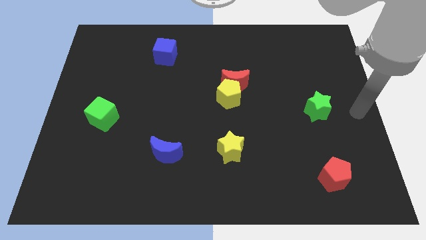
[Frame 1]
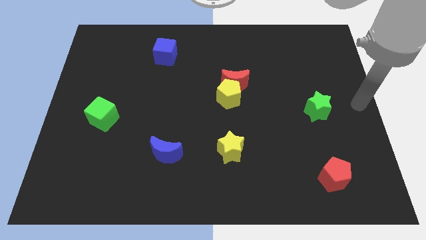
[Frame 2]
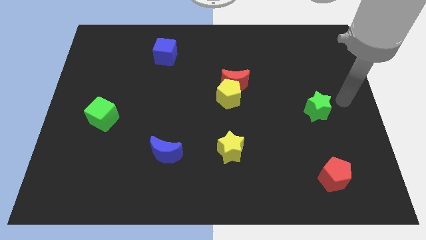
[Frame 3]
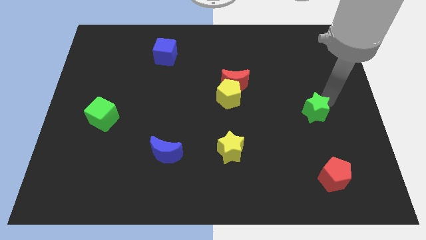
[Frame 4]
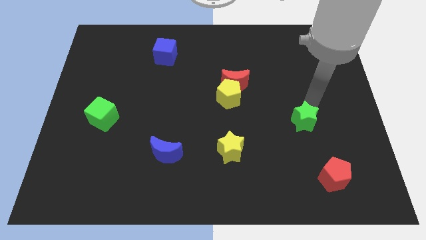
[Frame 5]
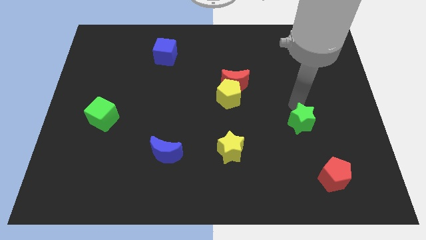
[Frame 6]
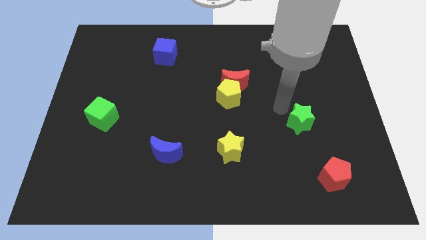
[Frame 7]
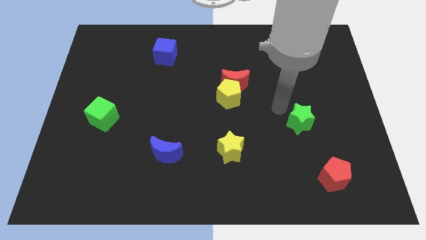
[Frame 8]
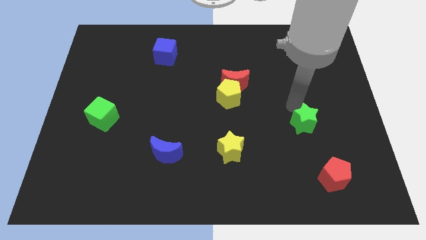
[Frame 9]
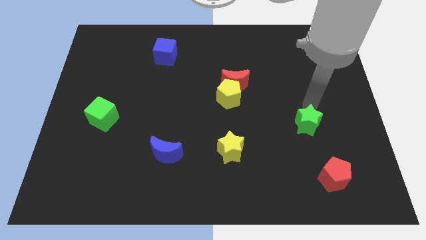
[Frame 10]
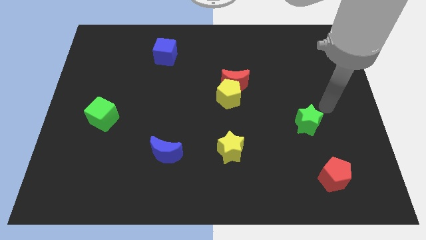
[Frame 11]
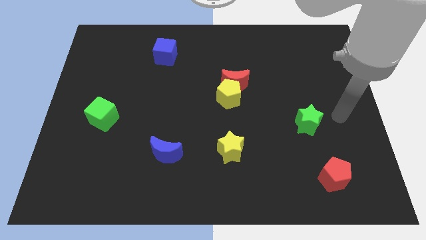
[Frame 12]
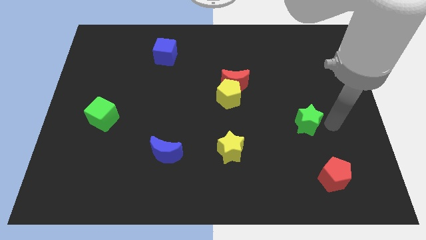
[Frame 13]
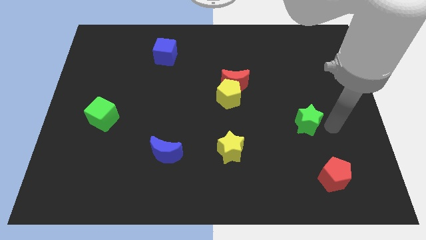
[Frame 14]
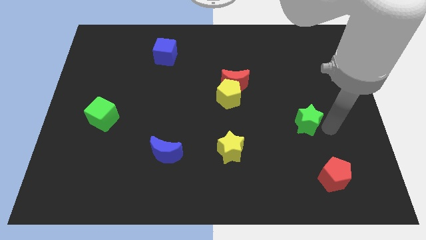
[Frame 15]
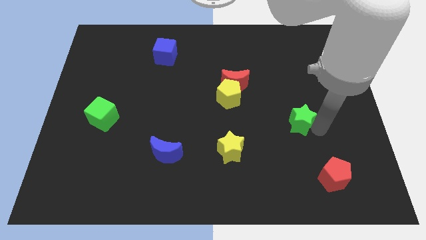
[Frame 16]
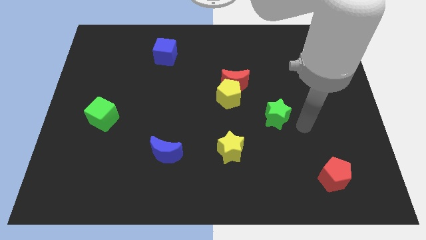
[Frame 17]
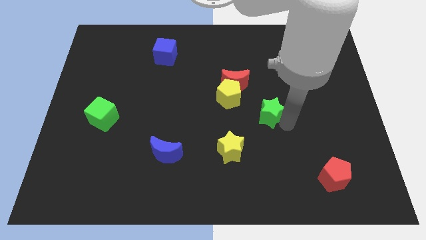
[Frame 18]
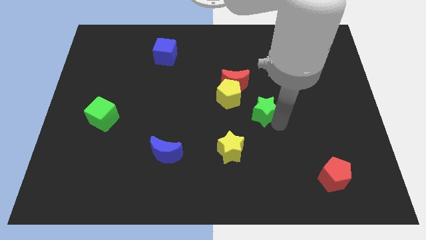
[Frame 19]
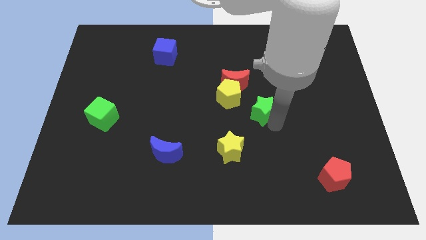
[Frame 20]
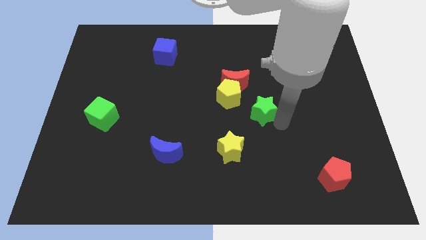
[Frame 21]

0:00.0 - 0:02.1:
push the green star towards the yellow pentagon

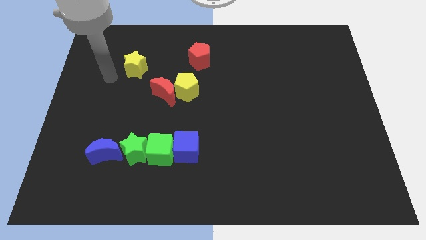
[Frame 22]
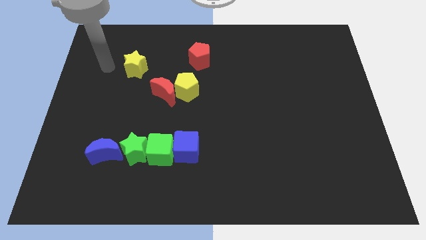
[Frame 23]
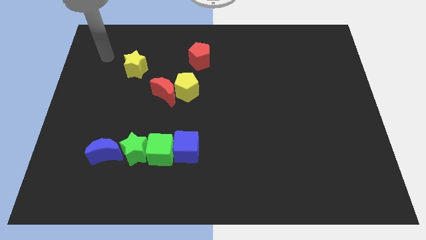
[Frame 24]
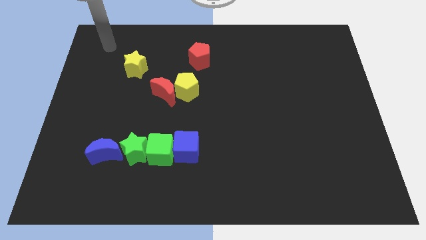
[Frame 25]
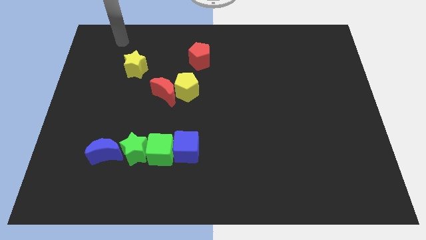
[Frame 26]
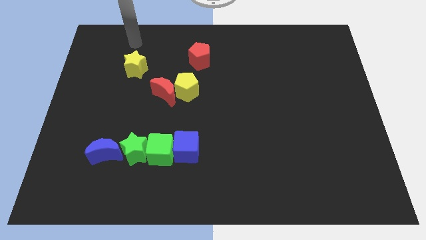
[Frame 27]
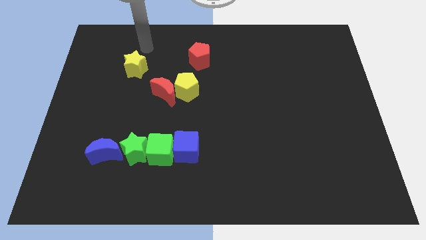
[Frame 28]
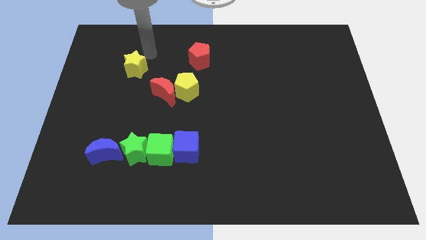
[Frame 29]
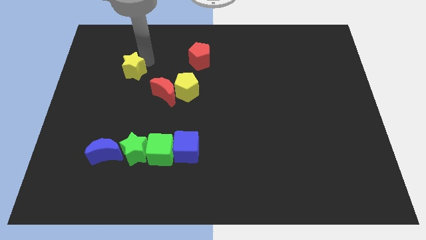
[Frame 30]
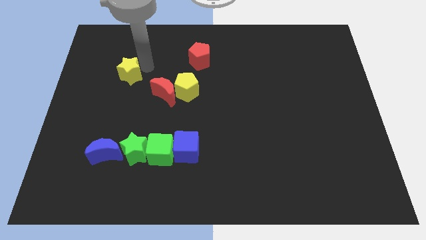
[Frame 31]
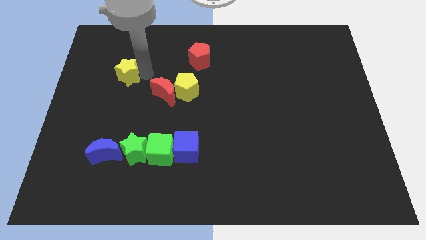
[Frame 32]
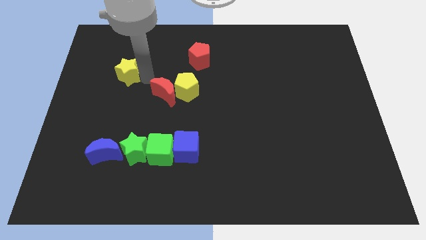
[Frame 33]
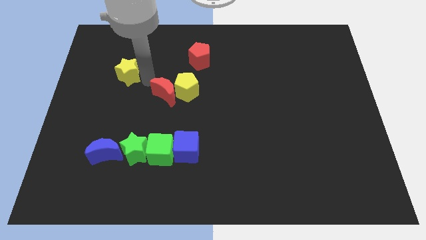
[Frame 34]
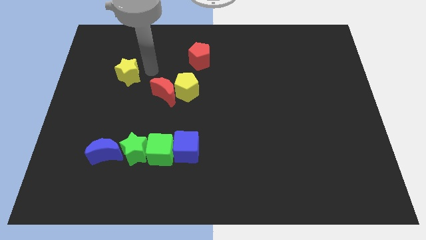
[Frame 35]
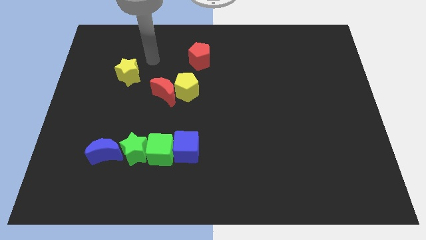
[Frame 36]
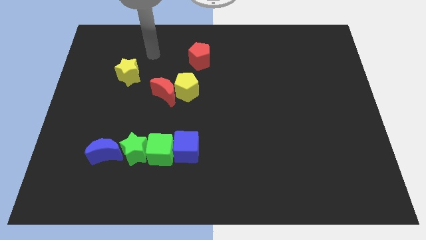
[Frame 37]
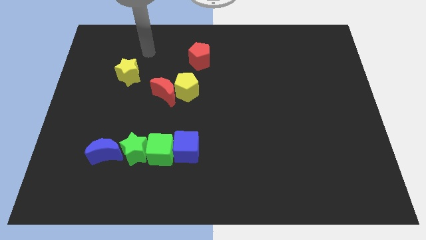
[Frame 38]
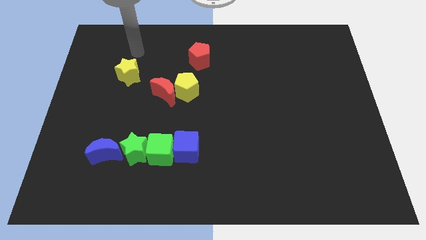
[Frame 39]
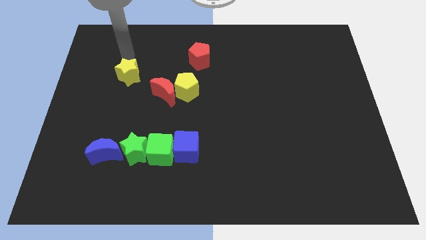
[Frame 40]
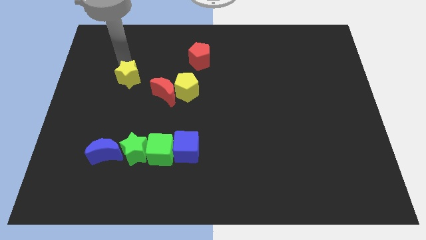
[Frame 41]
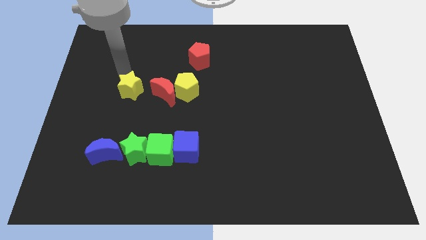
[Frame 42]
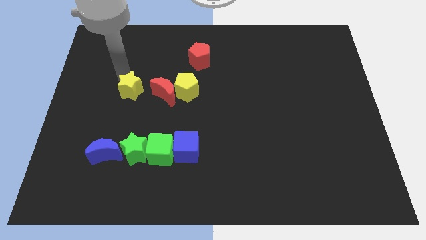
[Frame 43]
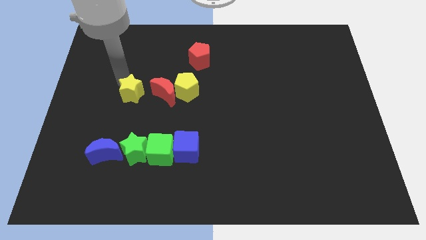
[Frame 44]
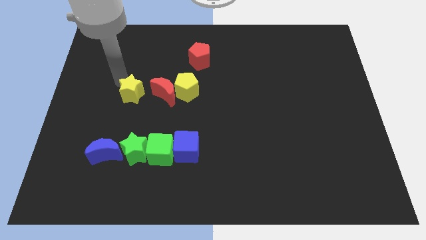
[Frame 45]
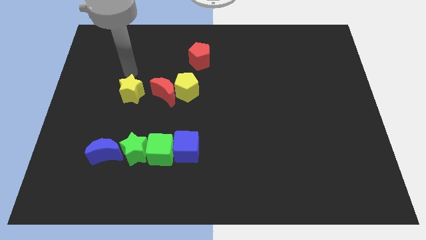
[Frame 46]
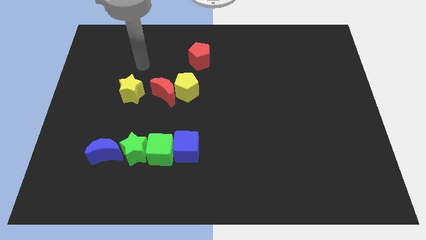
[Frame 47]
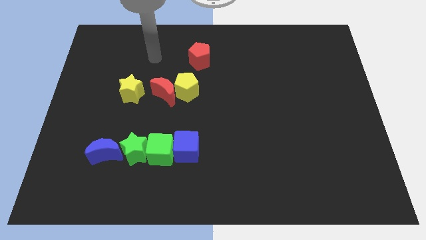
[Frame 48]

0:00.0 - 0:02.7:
move the yellow star parallel to the red crescent

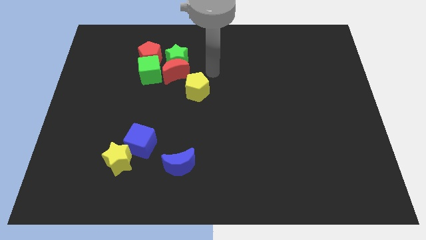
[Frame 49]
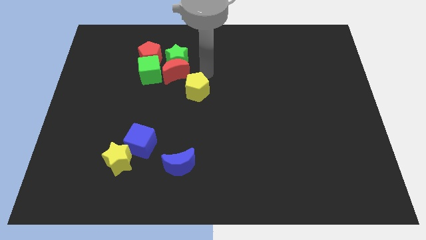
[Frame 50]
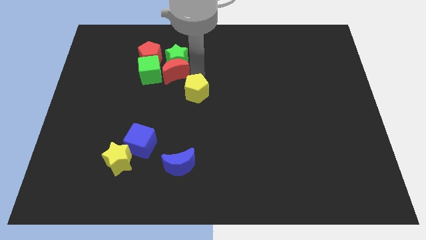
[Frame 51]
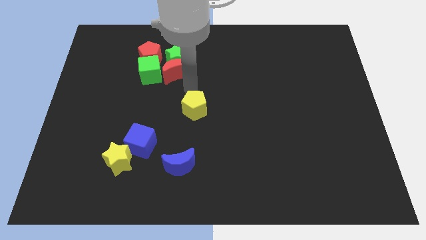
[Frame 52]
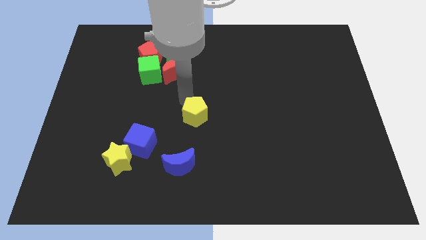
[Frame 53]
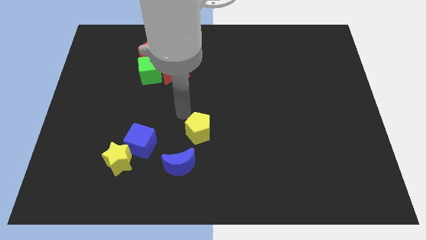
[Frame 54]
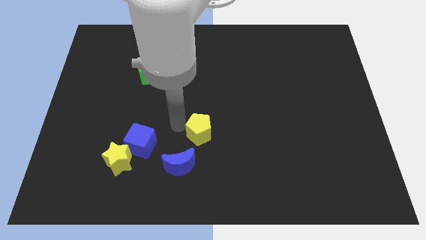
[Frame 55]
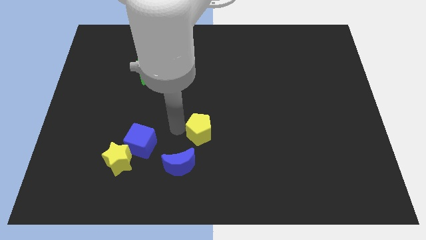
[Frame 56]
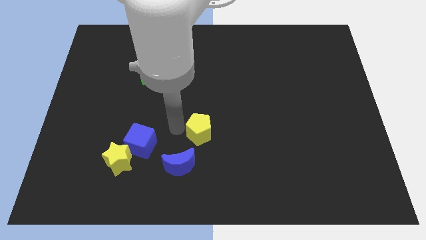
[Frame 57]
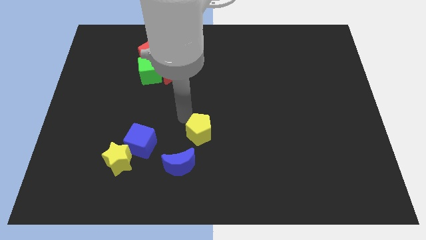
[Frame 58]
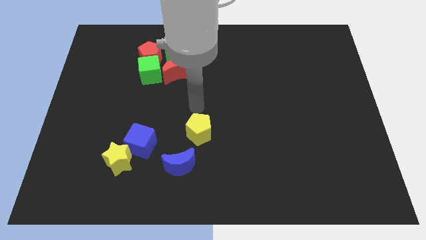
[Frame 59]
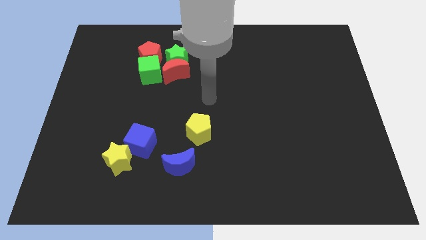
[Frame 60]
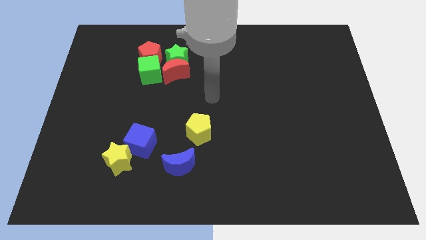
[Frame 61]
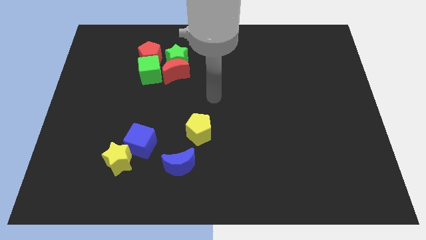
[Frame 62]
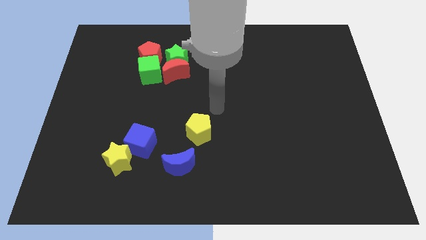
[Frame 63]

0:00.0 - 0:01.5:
move the yellow pentagon diagonally to the top right of the blue moon

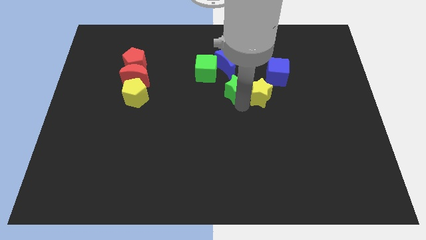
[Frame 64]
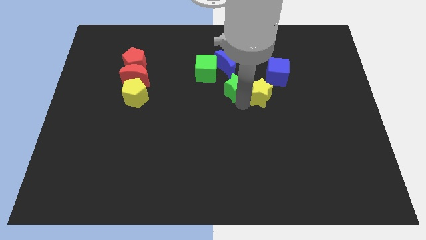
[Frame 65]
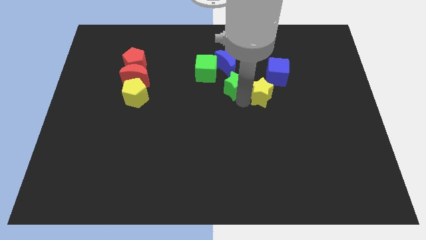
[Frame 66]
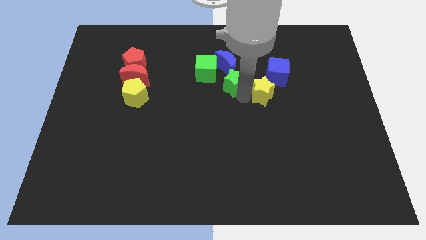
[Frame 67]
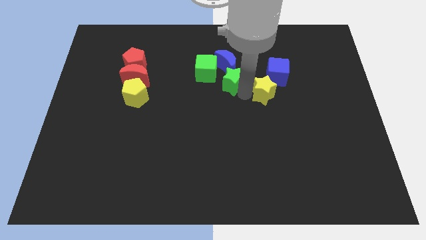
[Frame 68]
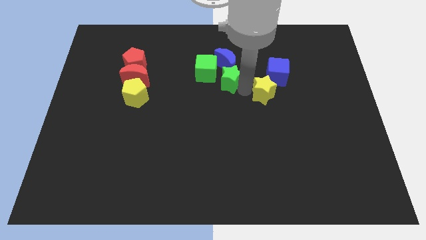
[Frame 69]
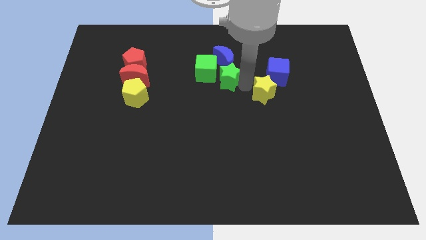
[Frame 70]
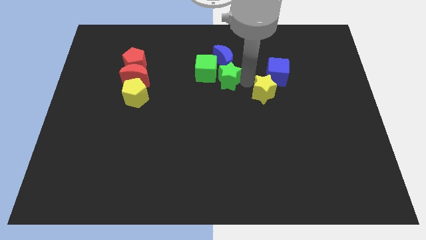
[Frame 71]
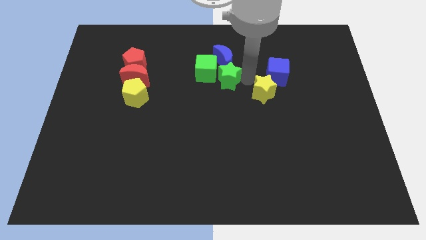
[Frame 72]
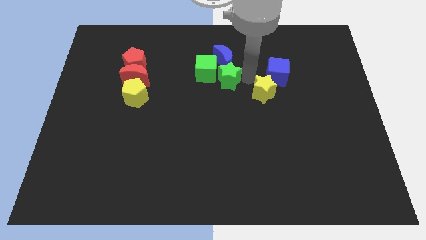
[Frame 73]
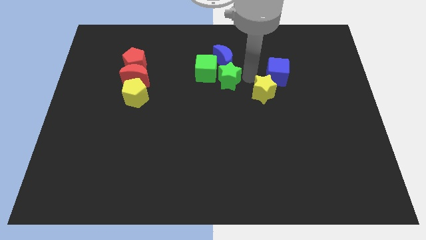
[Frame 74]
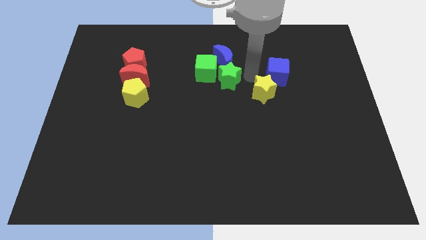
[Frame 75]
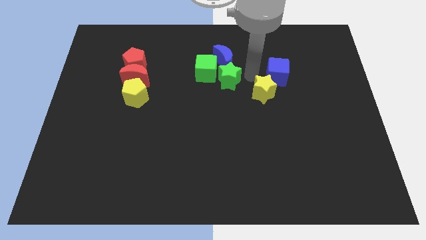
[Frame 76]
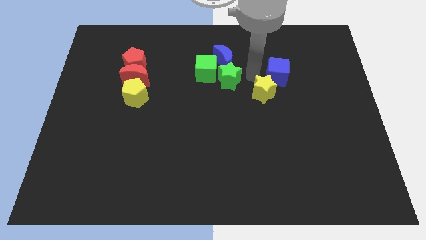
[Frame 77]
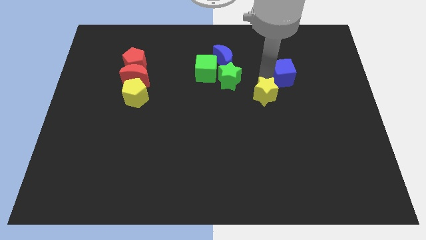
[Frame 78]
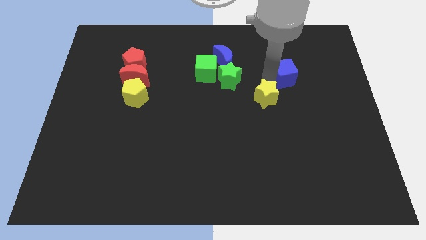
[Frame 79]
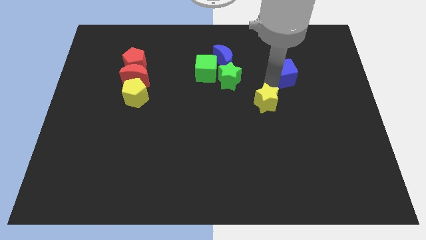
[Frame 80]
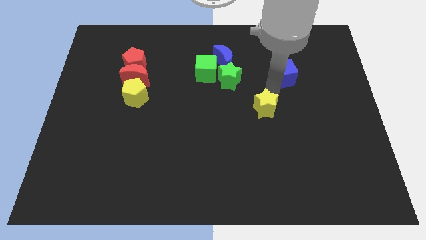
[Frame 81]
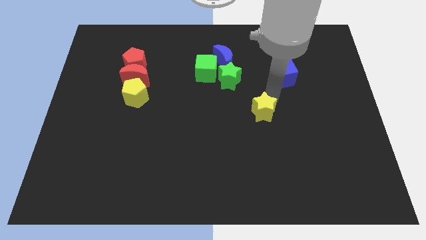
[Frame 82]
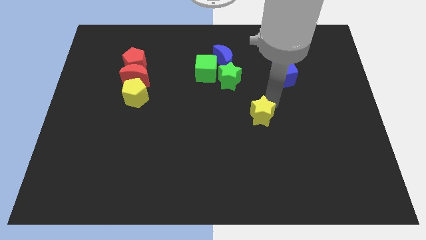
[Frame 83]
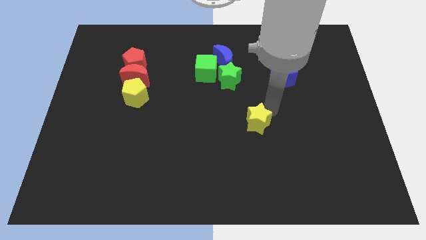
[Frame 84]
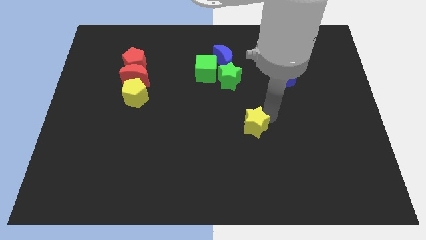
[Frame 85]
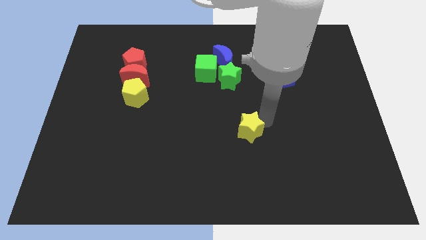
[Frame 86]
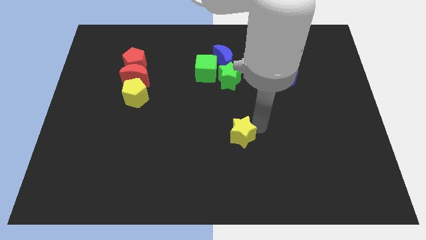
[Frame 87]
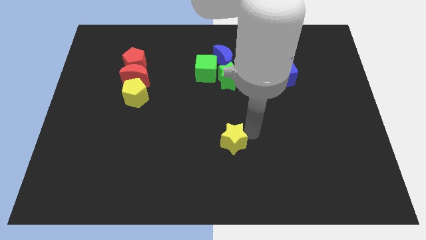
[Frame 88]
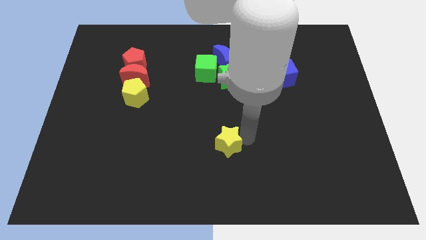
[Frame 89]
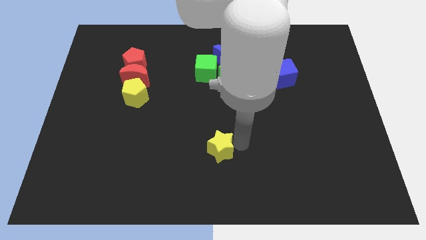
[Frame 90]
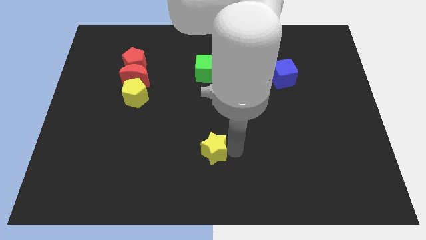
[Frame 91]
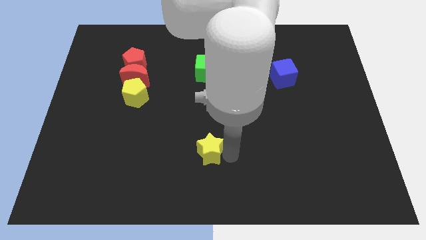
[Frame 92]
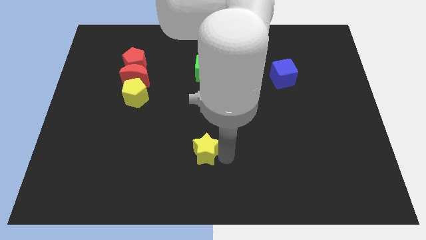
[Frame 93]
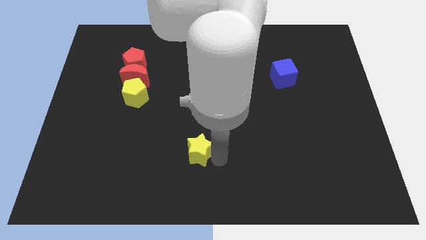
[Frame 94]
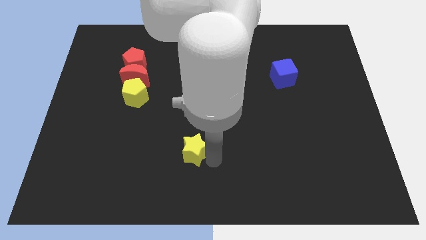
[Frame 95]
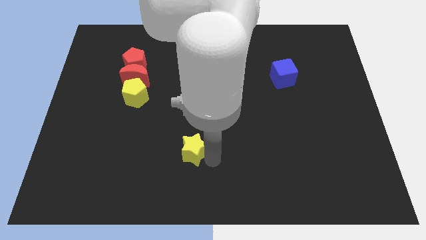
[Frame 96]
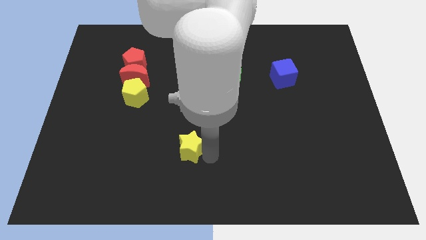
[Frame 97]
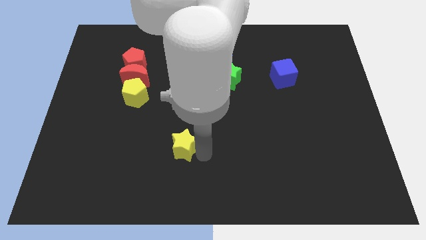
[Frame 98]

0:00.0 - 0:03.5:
place the yellow star diagonally bottom right to the yellow pentagon
